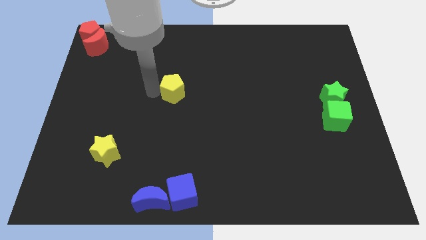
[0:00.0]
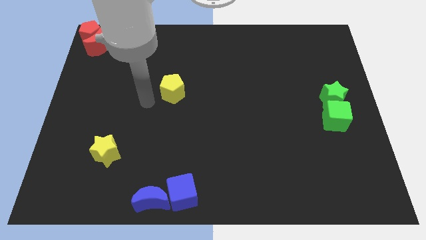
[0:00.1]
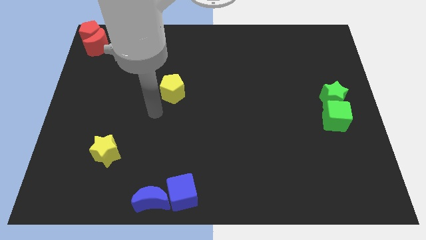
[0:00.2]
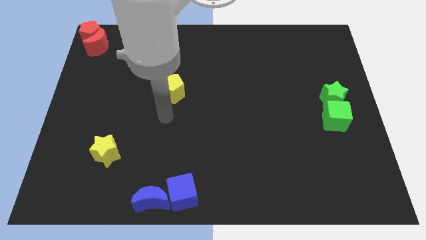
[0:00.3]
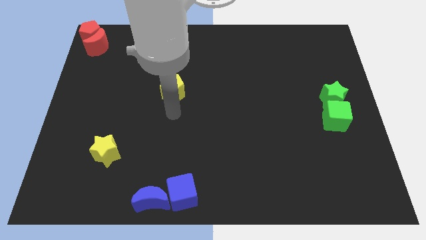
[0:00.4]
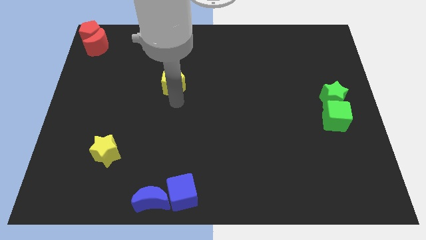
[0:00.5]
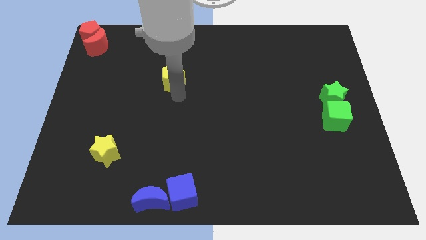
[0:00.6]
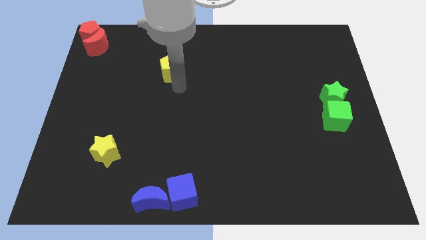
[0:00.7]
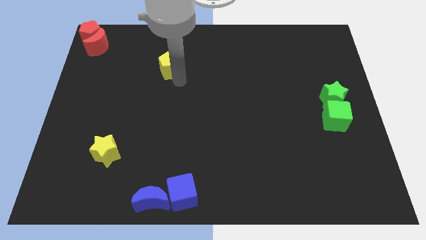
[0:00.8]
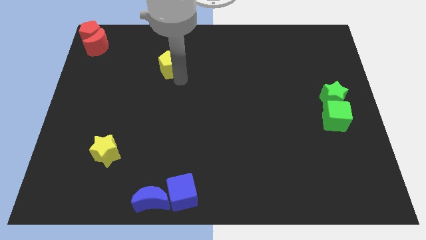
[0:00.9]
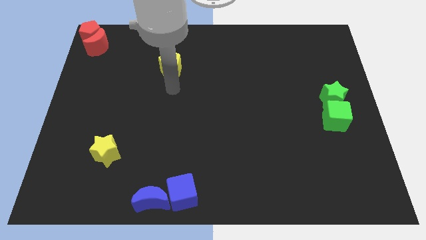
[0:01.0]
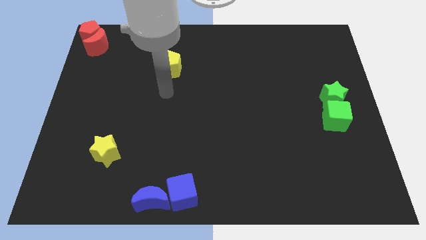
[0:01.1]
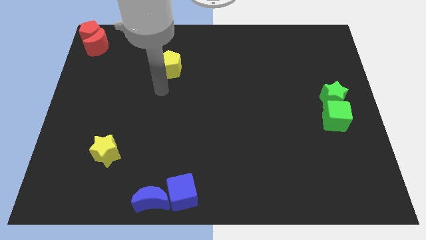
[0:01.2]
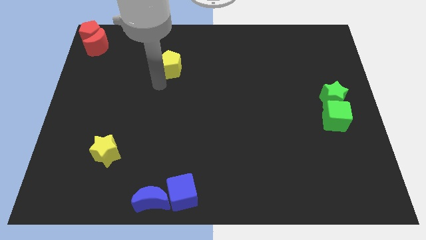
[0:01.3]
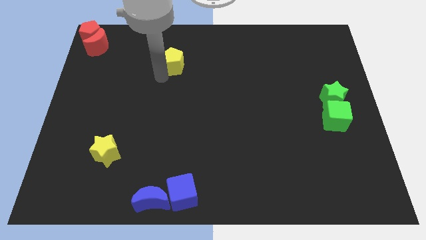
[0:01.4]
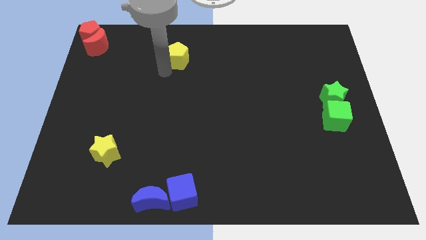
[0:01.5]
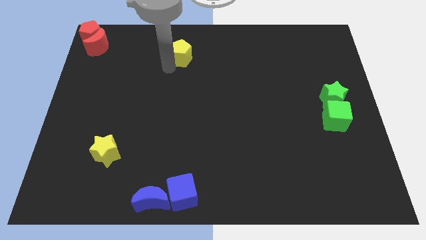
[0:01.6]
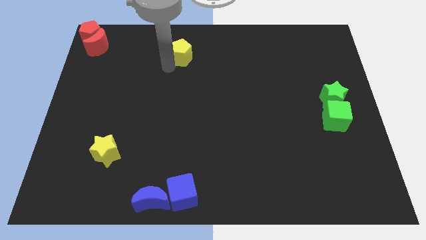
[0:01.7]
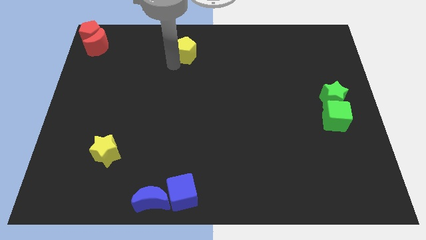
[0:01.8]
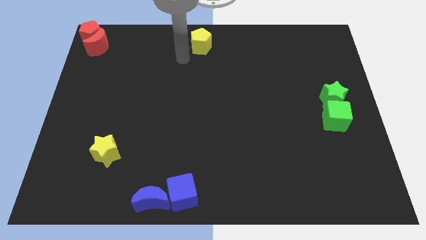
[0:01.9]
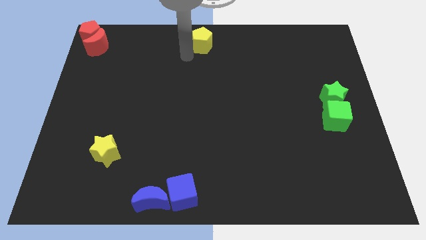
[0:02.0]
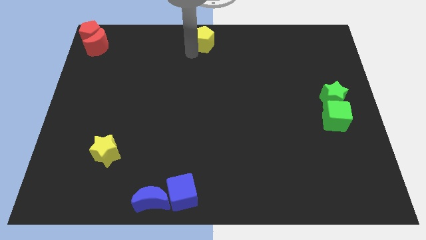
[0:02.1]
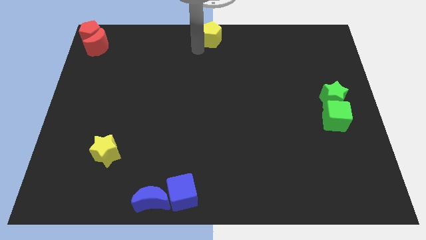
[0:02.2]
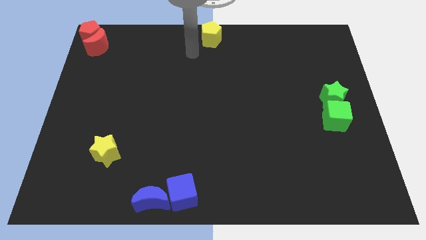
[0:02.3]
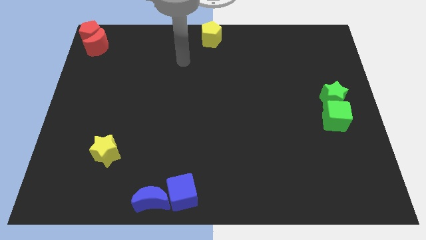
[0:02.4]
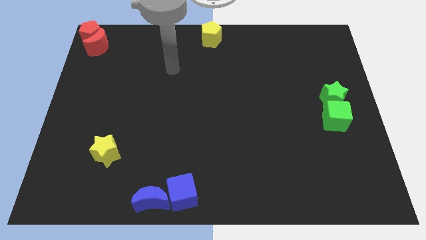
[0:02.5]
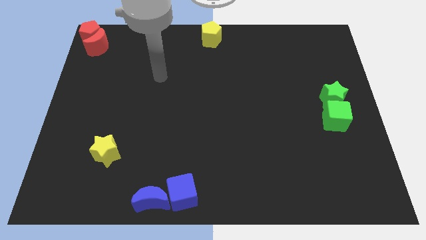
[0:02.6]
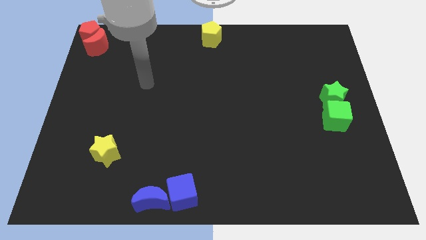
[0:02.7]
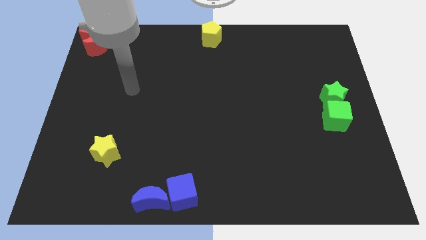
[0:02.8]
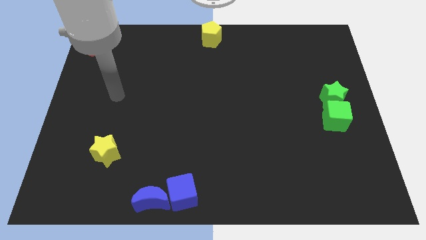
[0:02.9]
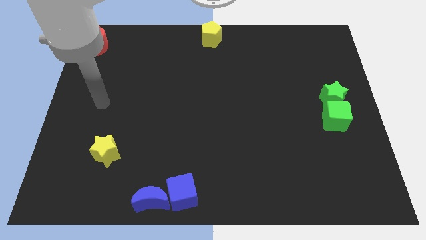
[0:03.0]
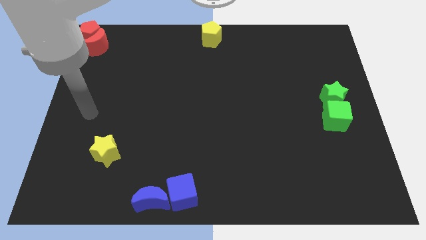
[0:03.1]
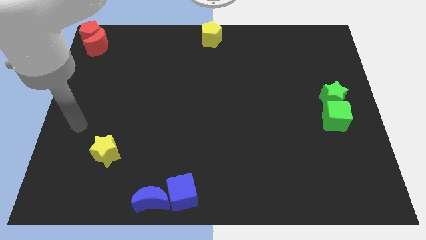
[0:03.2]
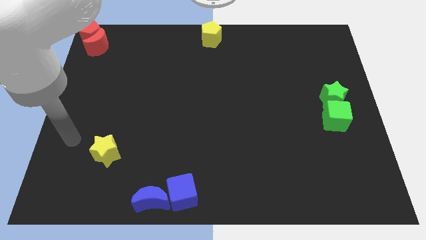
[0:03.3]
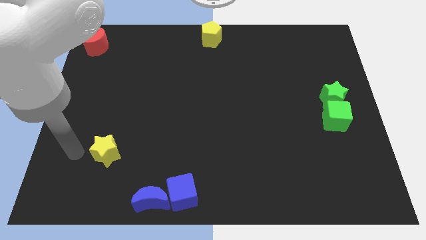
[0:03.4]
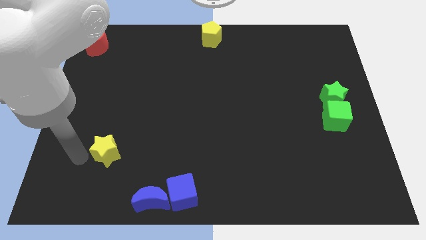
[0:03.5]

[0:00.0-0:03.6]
place the yellow pentagon at top center of the board

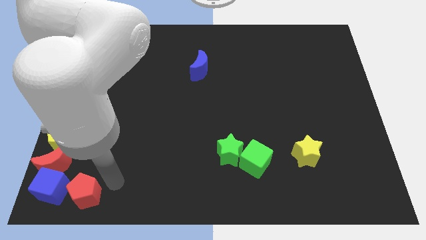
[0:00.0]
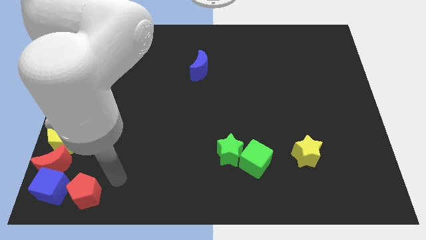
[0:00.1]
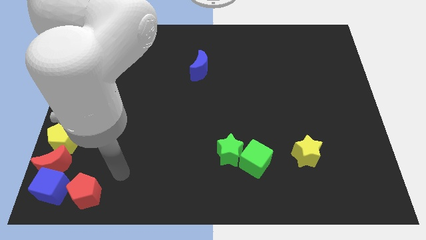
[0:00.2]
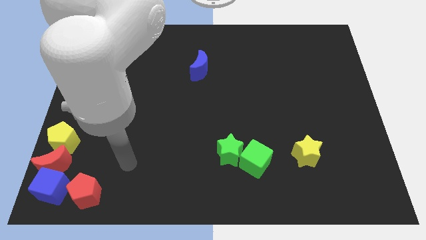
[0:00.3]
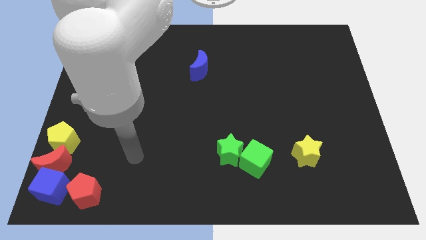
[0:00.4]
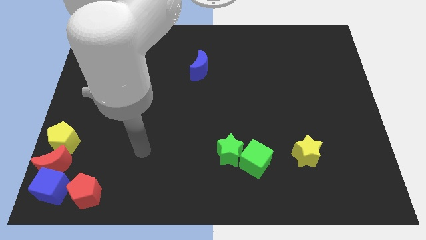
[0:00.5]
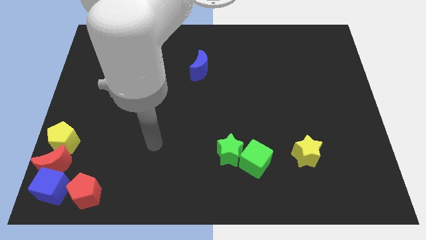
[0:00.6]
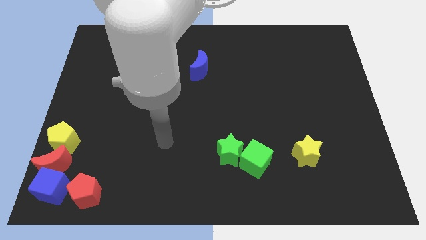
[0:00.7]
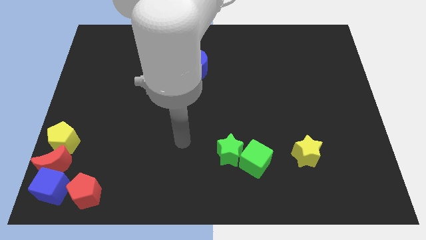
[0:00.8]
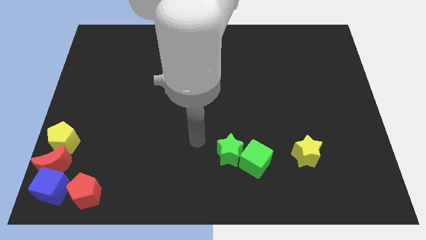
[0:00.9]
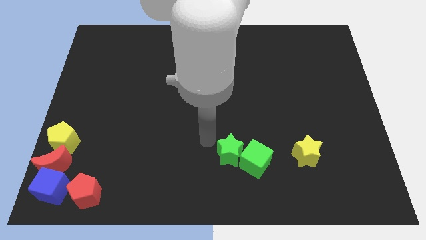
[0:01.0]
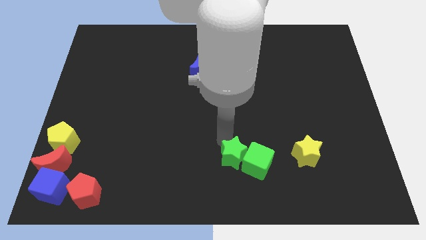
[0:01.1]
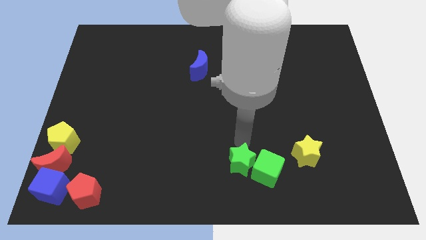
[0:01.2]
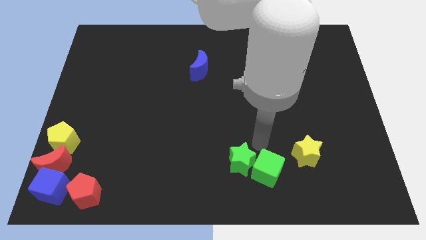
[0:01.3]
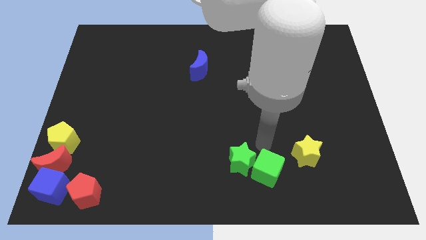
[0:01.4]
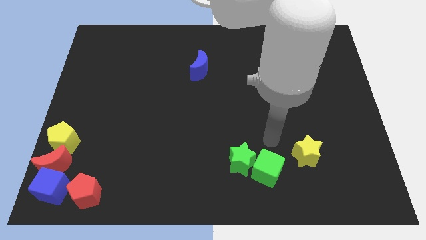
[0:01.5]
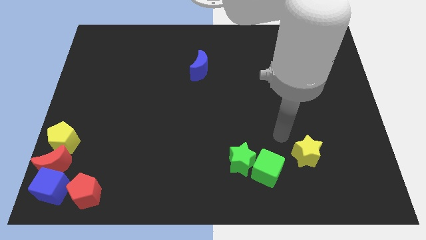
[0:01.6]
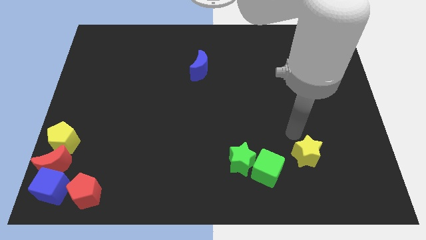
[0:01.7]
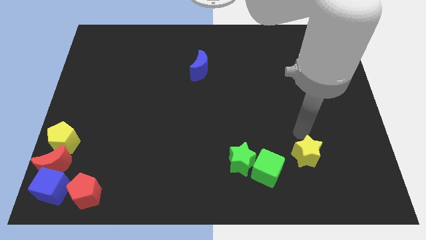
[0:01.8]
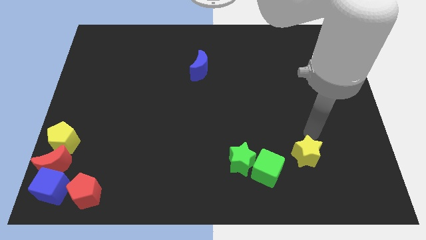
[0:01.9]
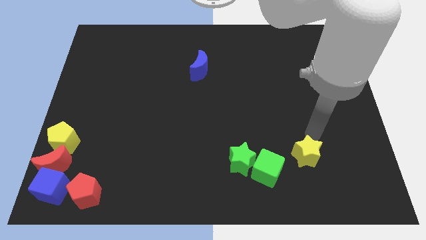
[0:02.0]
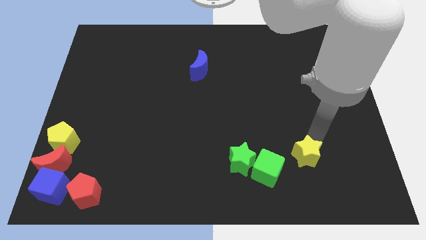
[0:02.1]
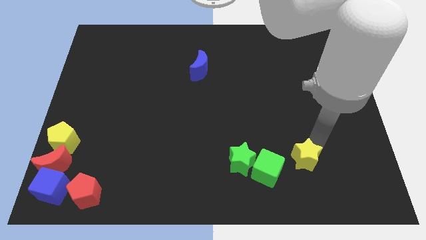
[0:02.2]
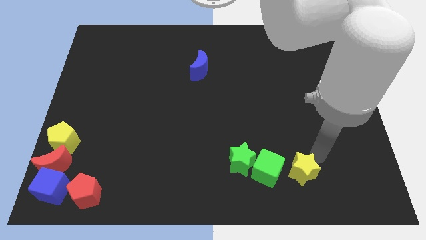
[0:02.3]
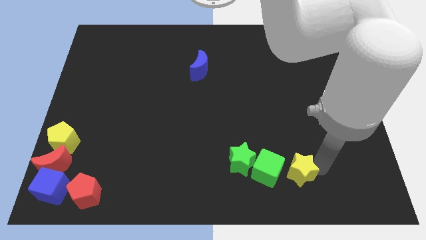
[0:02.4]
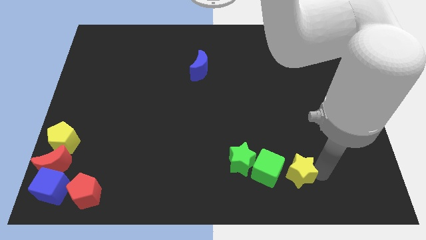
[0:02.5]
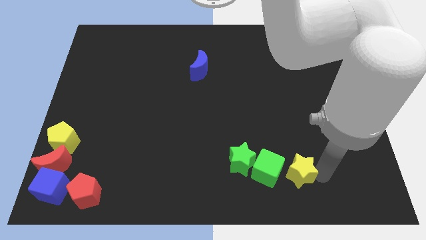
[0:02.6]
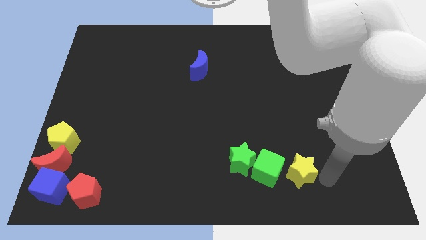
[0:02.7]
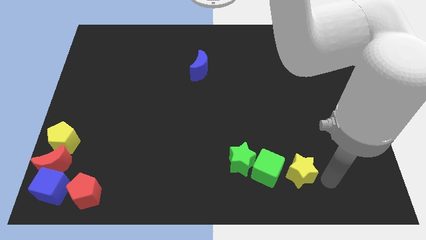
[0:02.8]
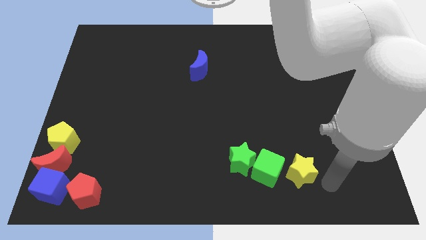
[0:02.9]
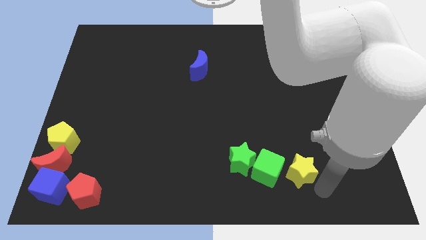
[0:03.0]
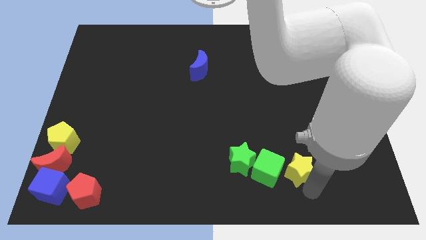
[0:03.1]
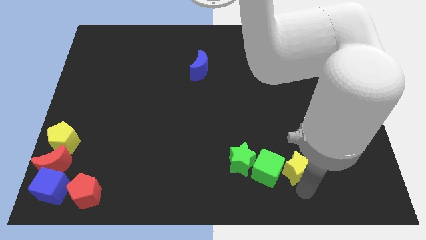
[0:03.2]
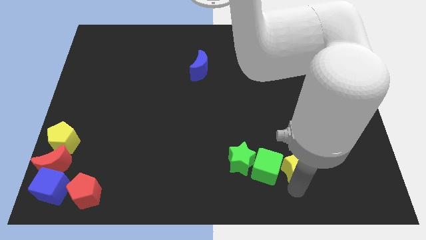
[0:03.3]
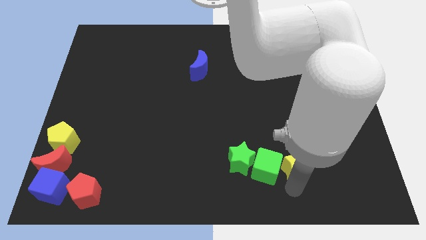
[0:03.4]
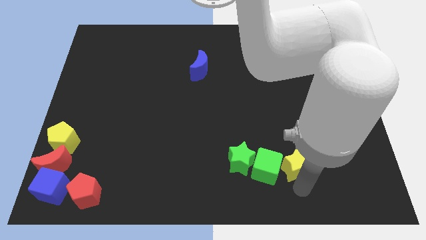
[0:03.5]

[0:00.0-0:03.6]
push yellow star into group of green blocks

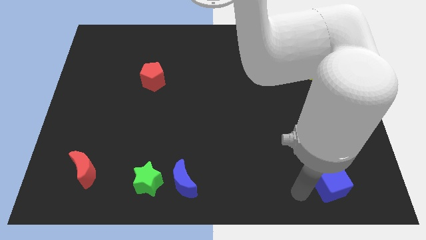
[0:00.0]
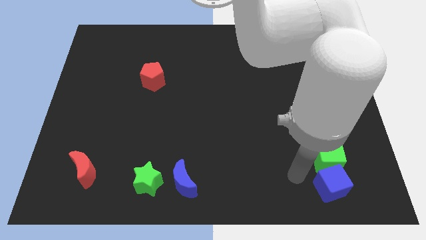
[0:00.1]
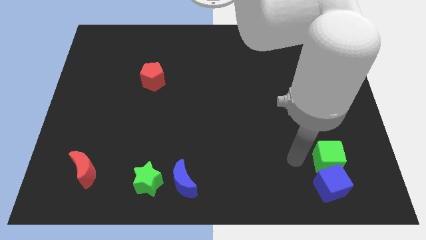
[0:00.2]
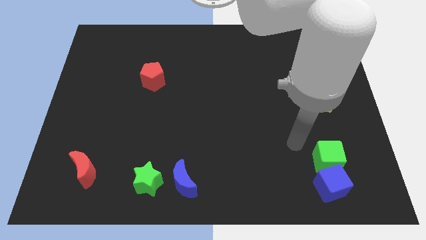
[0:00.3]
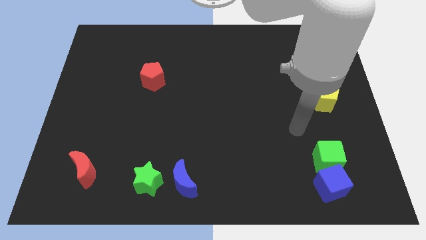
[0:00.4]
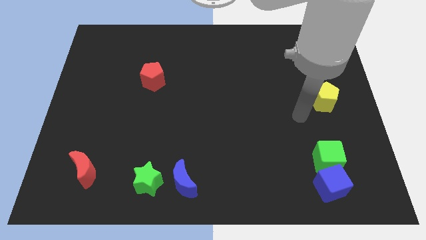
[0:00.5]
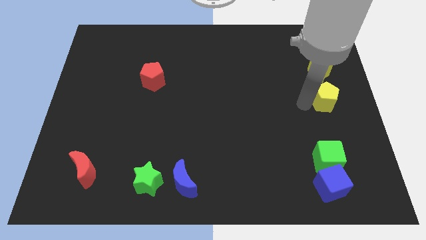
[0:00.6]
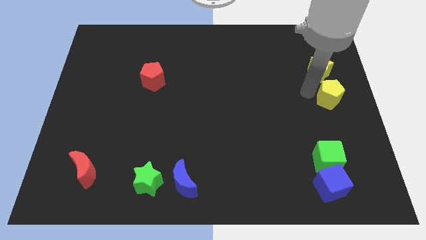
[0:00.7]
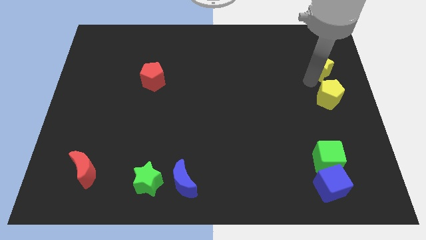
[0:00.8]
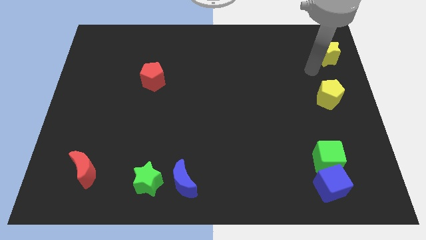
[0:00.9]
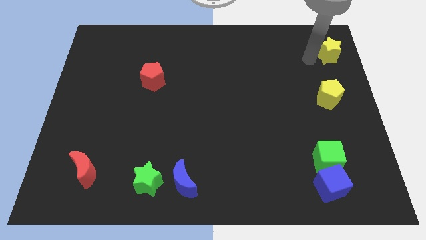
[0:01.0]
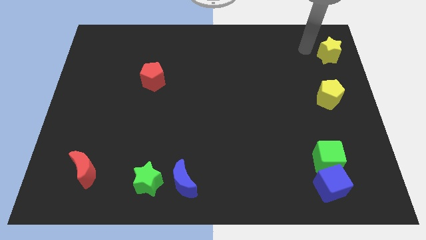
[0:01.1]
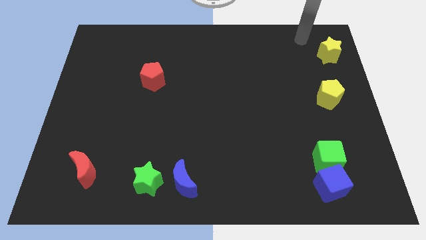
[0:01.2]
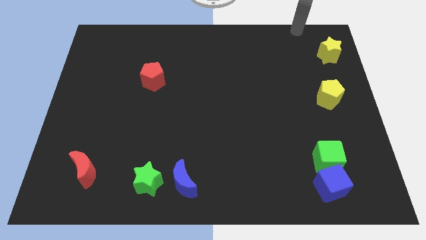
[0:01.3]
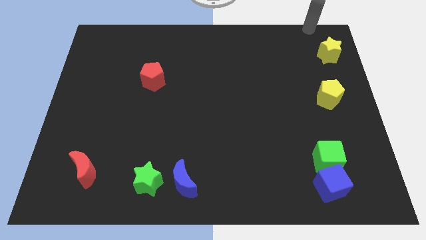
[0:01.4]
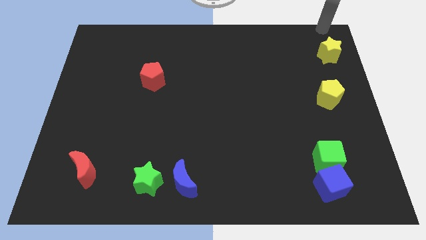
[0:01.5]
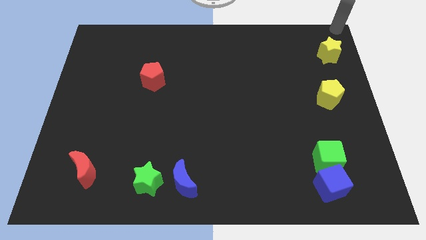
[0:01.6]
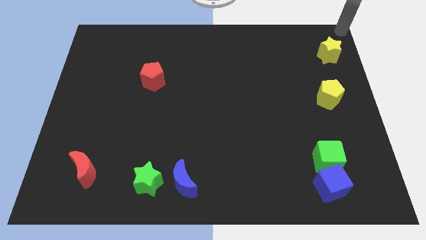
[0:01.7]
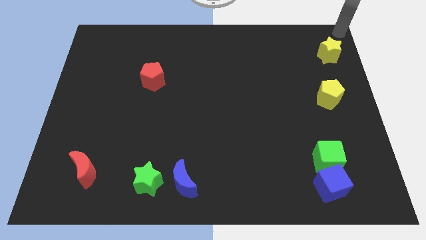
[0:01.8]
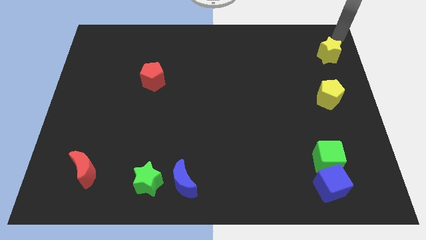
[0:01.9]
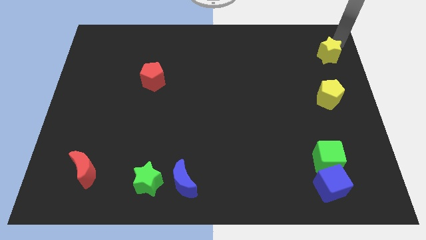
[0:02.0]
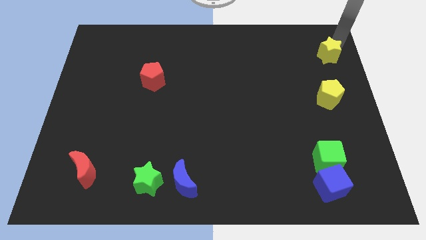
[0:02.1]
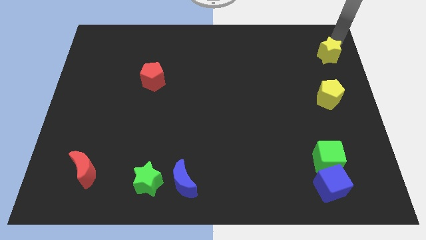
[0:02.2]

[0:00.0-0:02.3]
separate the yellow star and yellow pentagon
